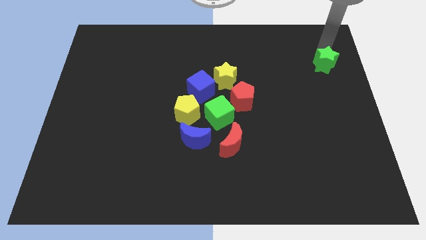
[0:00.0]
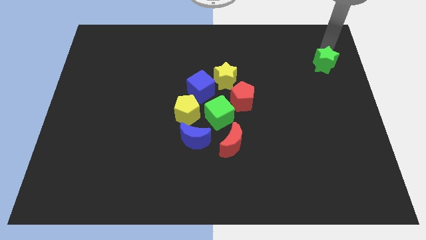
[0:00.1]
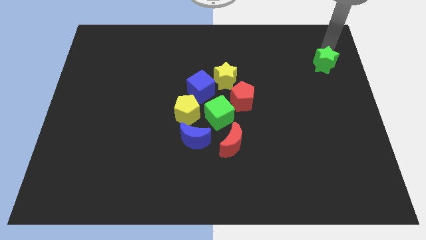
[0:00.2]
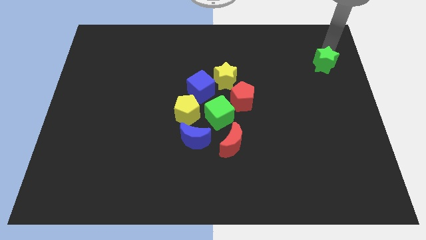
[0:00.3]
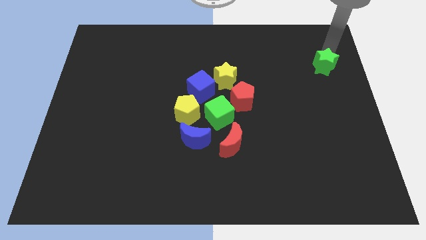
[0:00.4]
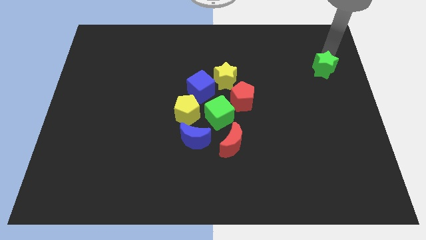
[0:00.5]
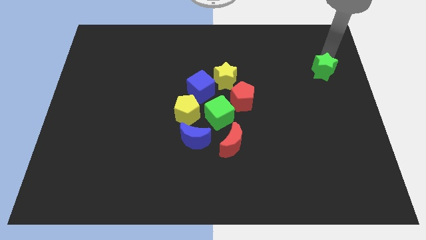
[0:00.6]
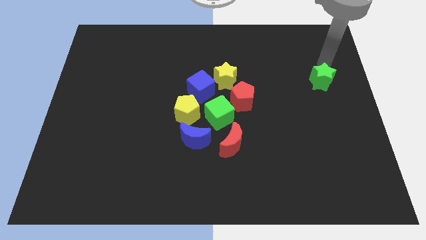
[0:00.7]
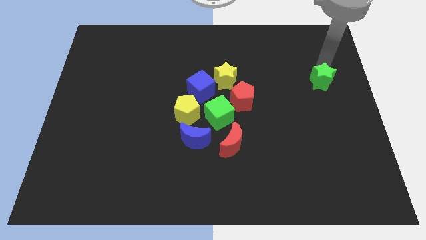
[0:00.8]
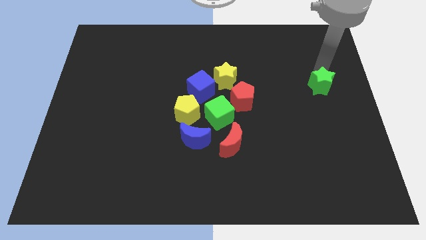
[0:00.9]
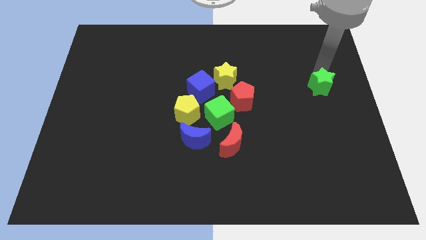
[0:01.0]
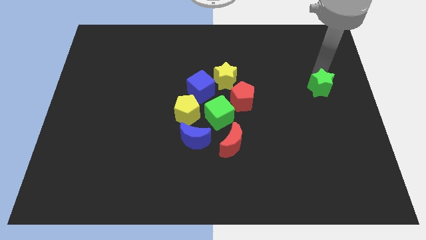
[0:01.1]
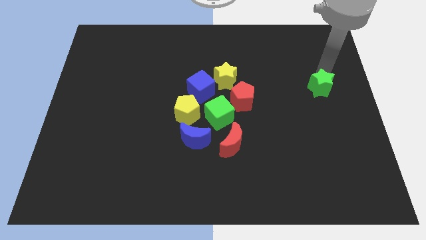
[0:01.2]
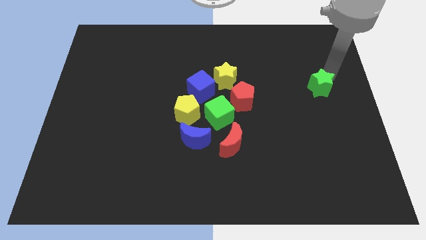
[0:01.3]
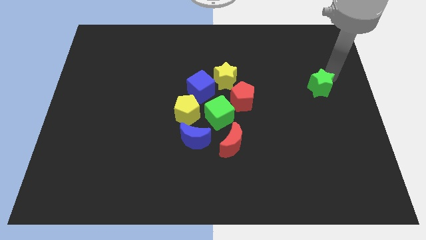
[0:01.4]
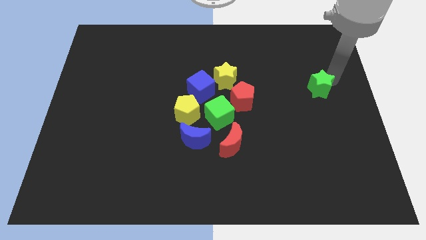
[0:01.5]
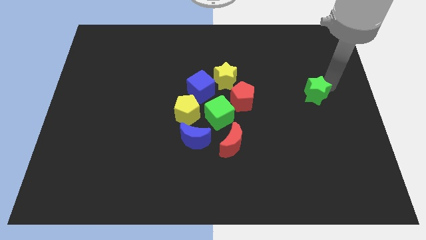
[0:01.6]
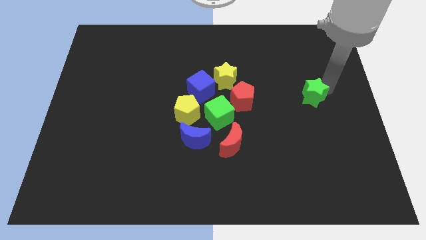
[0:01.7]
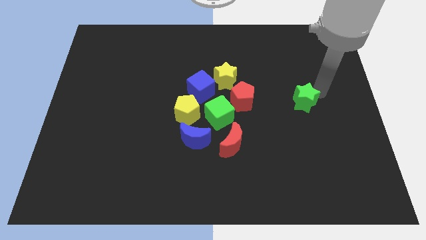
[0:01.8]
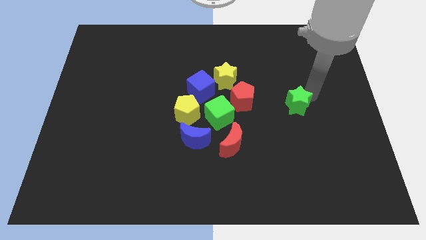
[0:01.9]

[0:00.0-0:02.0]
move the green star parallel right to the red pentagon

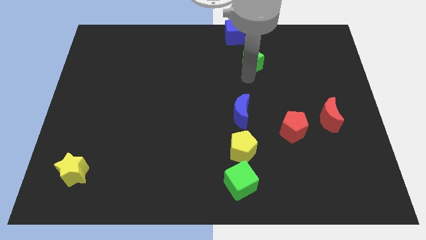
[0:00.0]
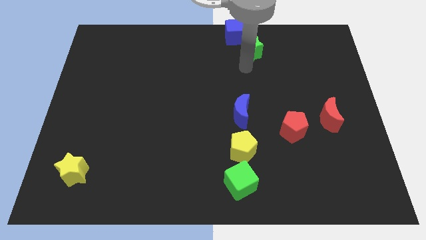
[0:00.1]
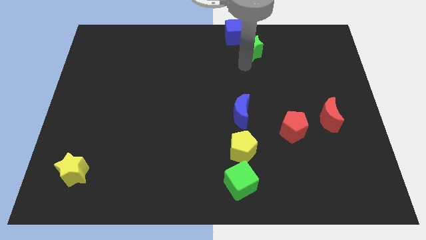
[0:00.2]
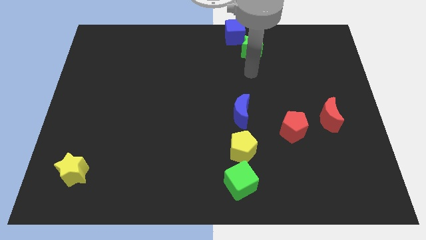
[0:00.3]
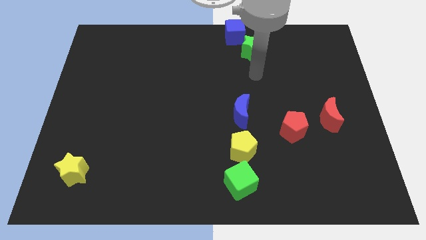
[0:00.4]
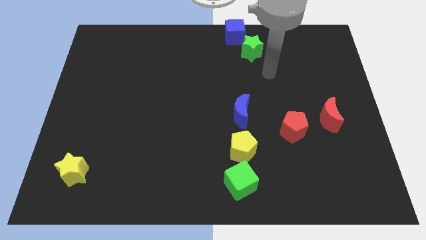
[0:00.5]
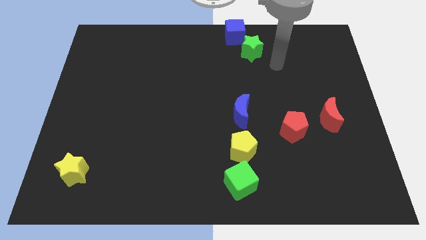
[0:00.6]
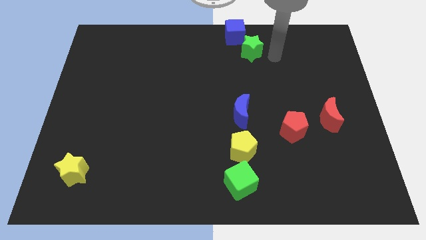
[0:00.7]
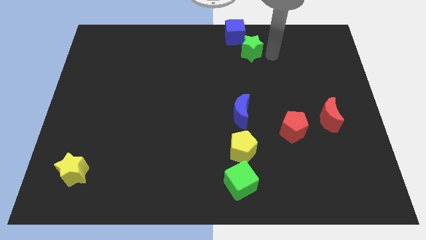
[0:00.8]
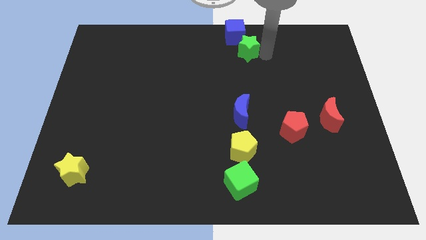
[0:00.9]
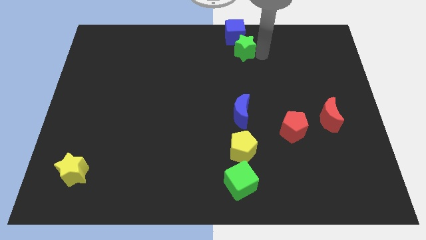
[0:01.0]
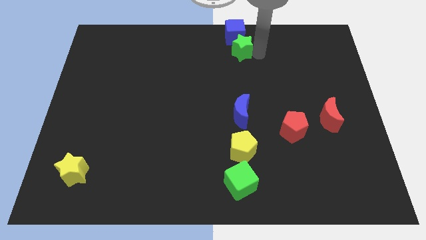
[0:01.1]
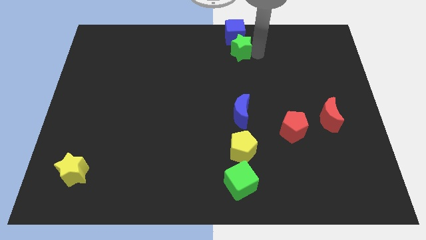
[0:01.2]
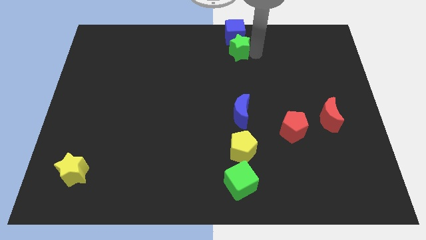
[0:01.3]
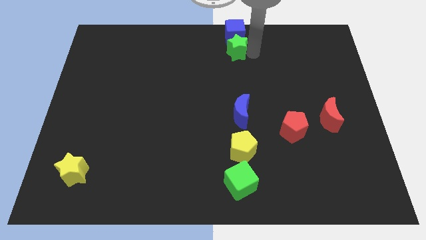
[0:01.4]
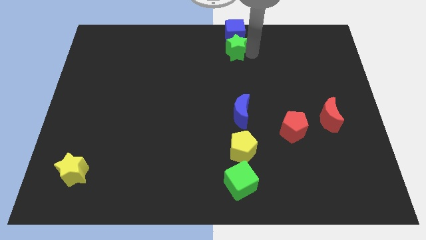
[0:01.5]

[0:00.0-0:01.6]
push the green star below the blue cube

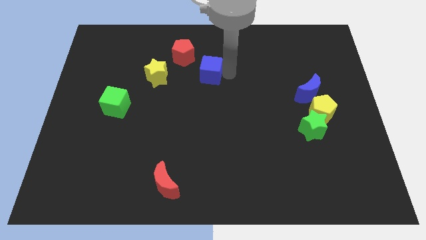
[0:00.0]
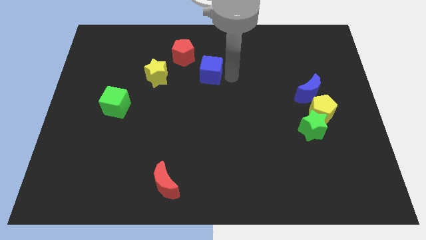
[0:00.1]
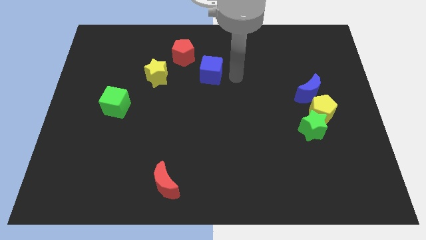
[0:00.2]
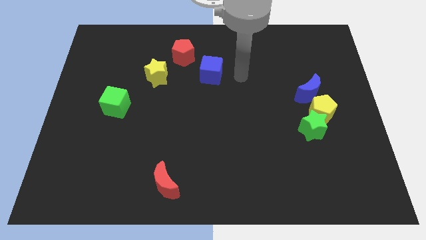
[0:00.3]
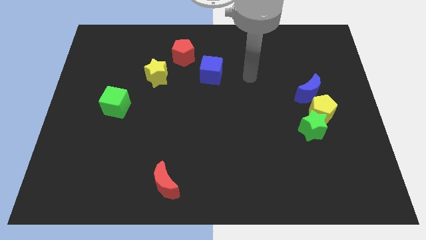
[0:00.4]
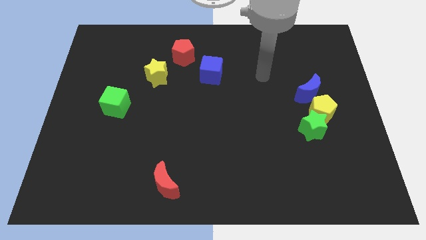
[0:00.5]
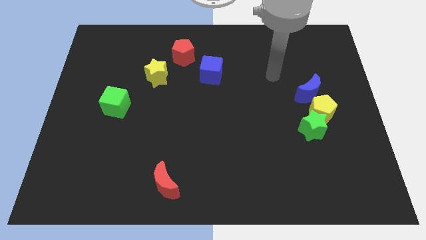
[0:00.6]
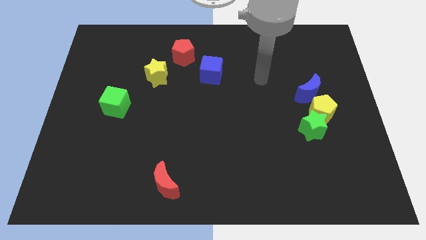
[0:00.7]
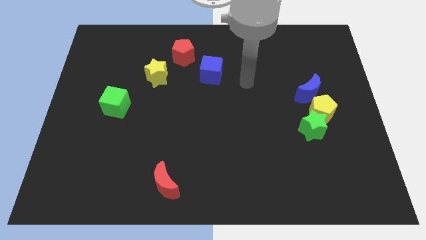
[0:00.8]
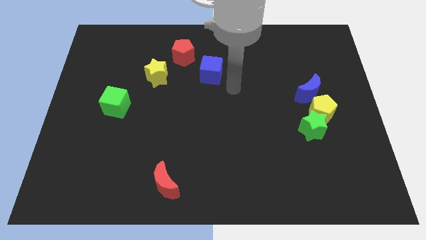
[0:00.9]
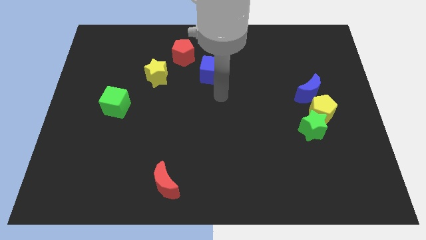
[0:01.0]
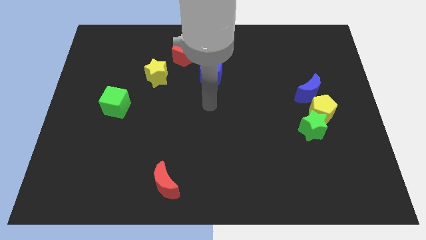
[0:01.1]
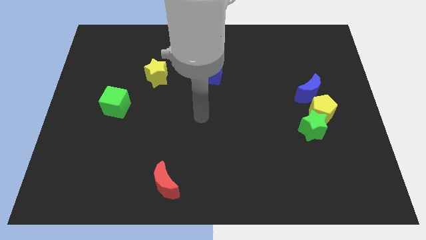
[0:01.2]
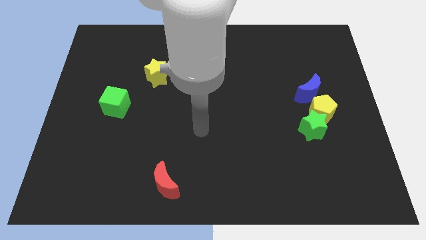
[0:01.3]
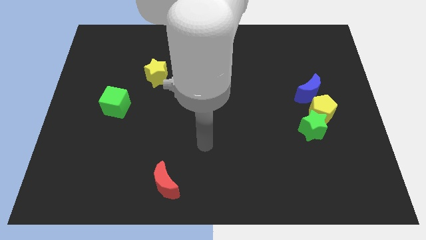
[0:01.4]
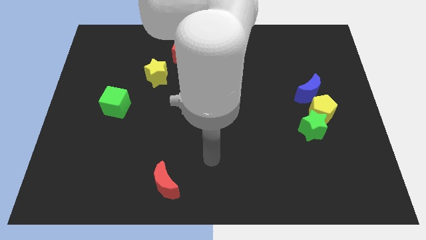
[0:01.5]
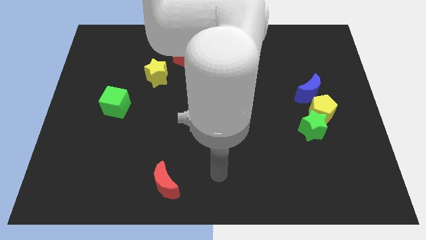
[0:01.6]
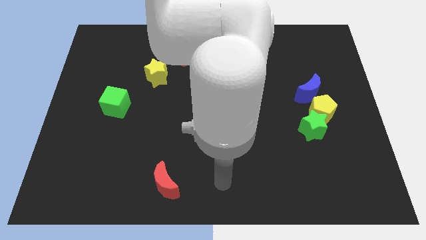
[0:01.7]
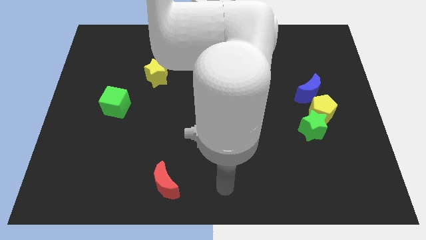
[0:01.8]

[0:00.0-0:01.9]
slide your hand away from the blue cube

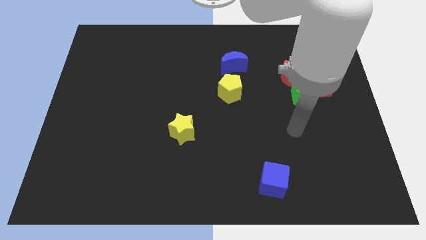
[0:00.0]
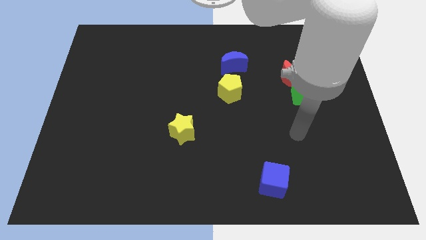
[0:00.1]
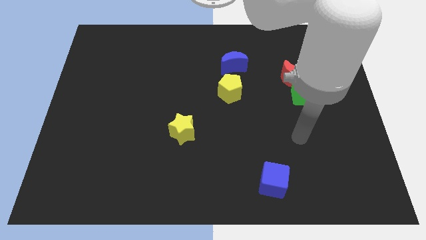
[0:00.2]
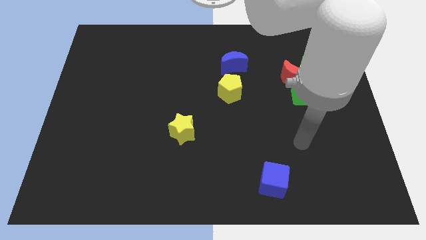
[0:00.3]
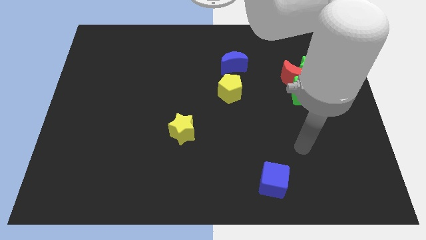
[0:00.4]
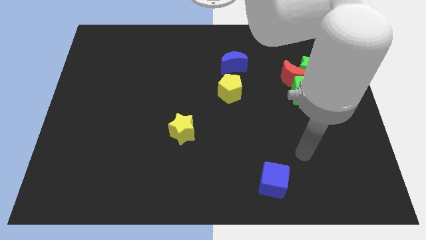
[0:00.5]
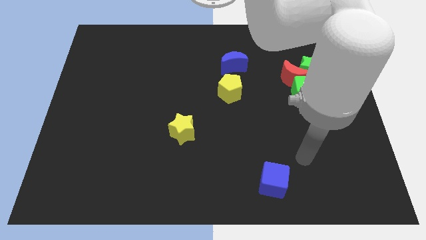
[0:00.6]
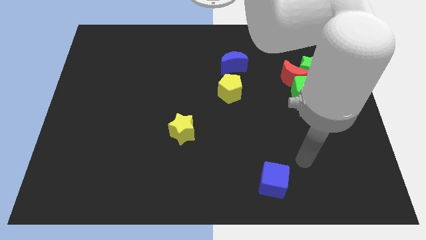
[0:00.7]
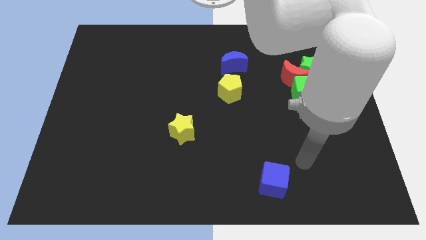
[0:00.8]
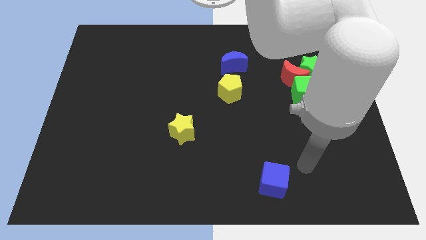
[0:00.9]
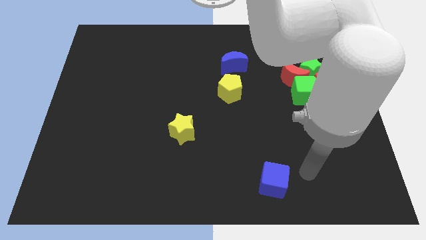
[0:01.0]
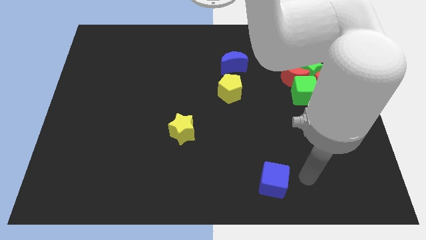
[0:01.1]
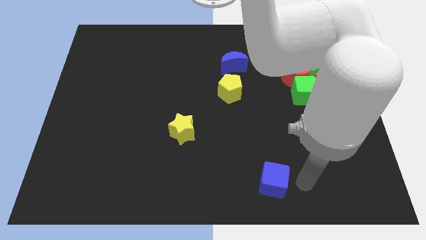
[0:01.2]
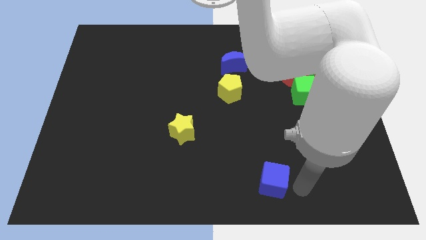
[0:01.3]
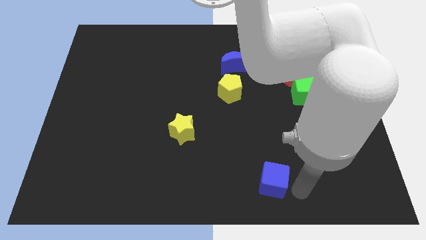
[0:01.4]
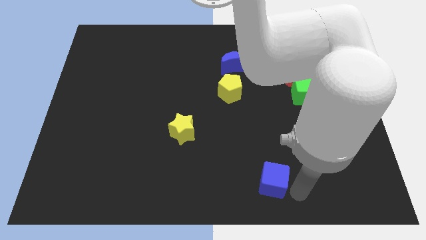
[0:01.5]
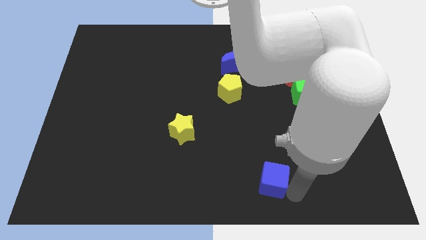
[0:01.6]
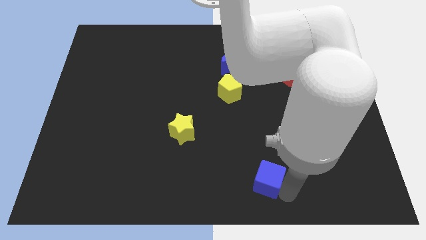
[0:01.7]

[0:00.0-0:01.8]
touch the bottom of blue cube

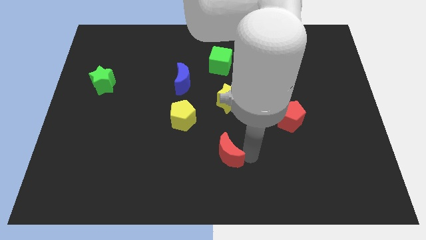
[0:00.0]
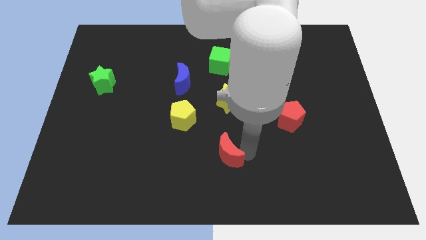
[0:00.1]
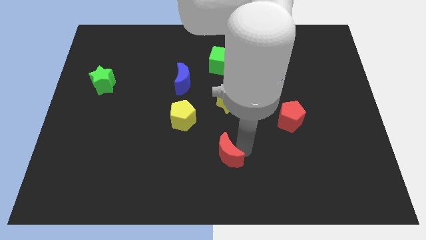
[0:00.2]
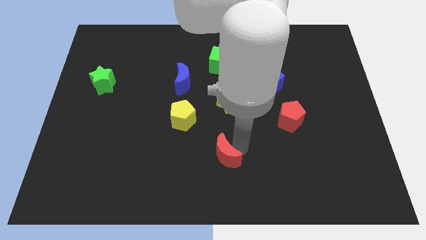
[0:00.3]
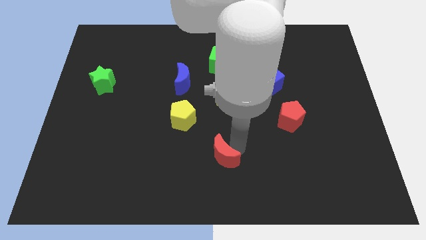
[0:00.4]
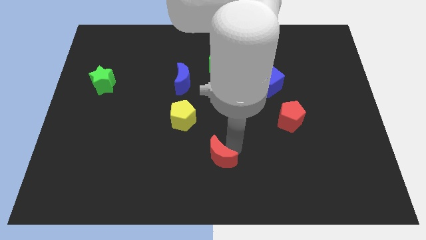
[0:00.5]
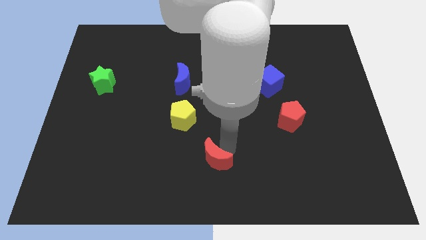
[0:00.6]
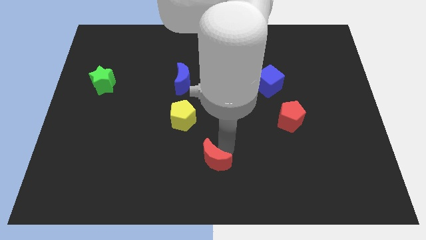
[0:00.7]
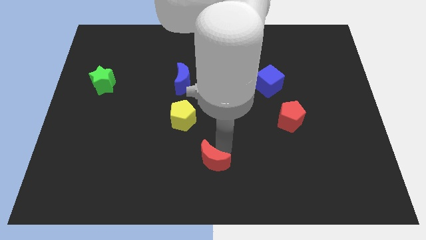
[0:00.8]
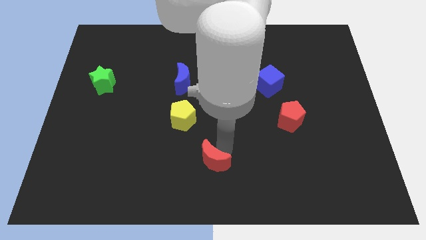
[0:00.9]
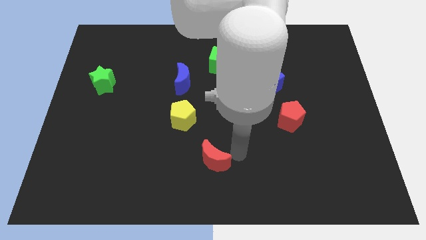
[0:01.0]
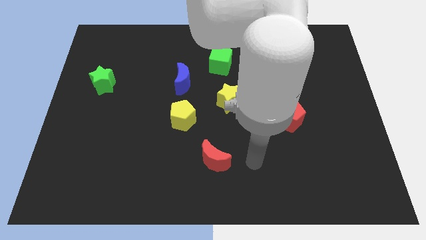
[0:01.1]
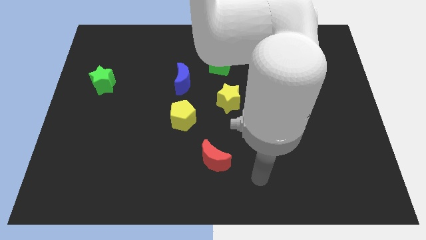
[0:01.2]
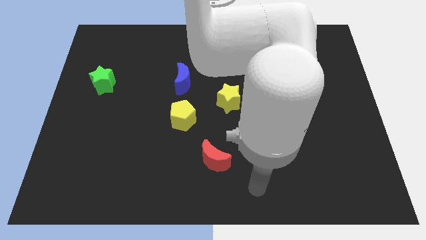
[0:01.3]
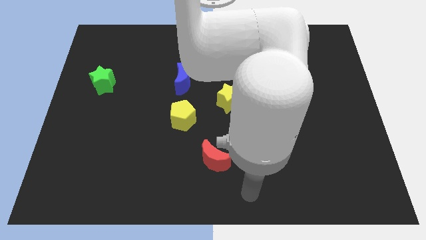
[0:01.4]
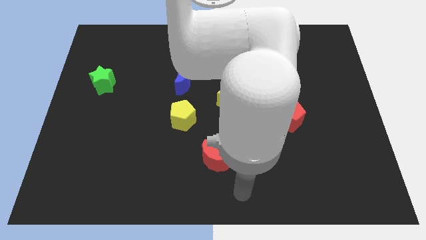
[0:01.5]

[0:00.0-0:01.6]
move the red moon slightly to the left
